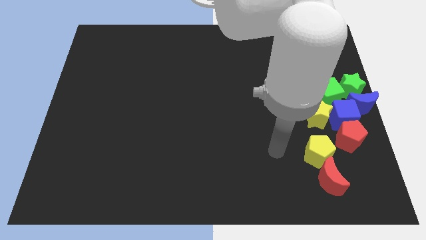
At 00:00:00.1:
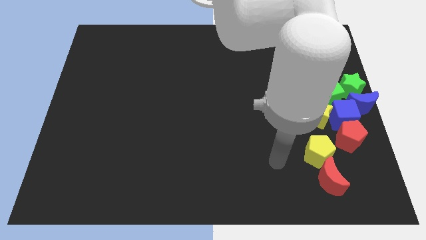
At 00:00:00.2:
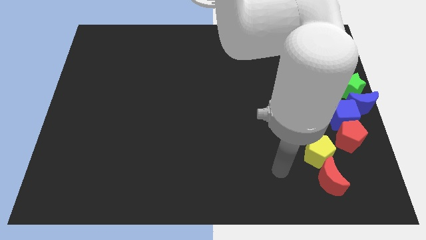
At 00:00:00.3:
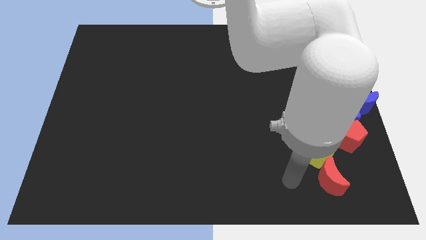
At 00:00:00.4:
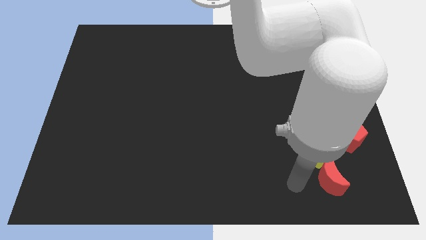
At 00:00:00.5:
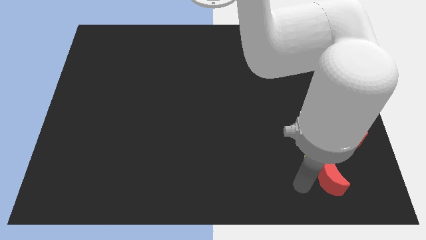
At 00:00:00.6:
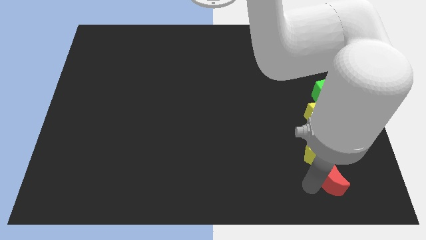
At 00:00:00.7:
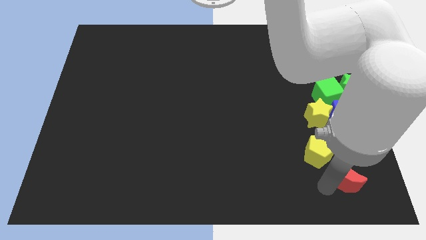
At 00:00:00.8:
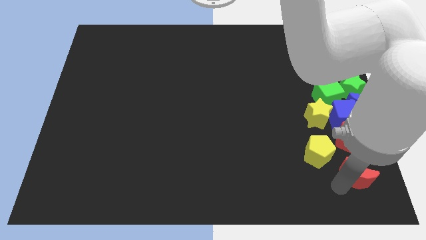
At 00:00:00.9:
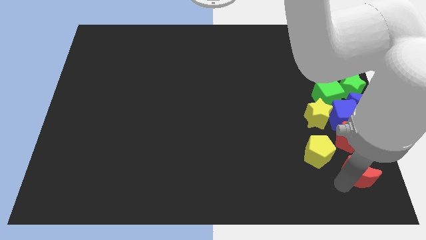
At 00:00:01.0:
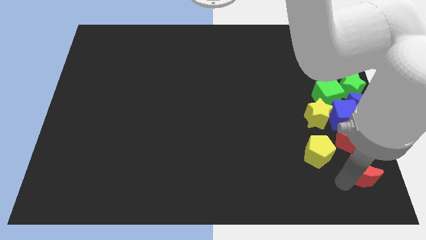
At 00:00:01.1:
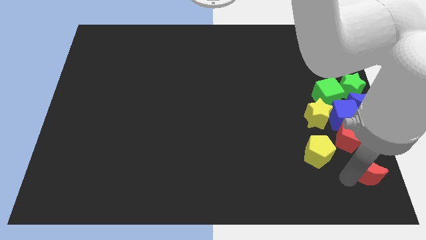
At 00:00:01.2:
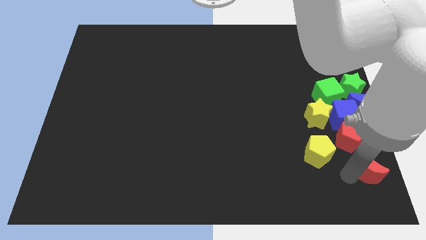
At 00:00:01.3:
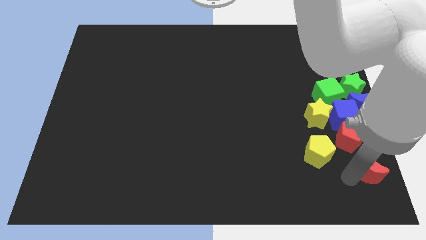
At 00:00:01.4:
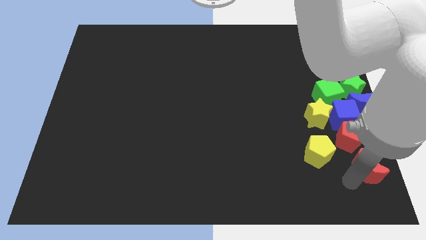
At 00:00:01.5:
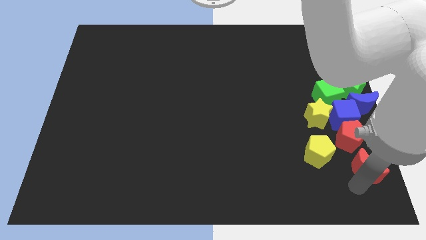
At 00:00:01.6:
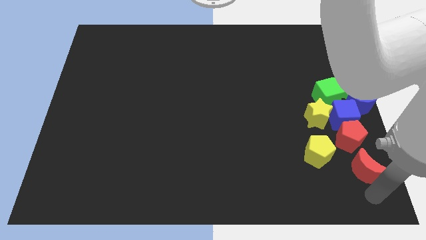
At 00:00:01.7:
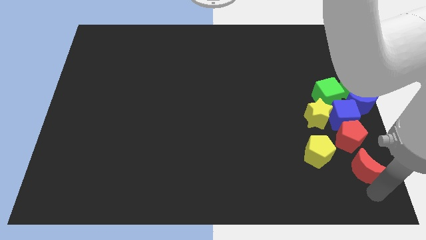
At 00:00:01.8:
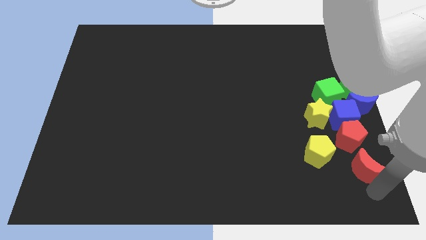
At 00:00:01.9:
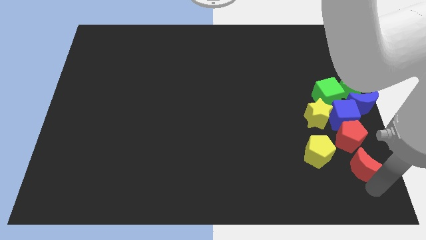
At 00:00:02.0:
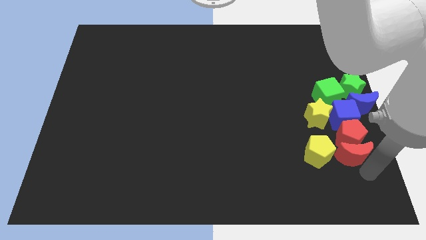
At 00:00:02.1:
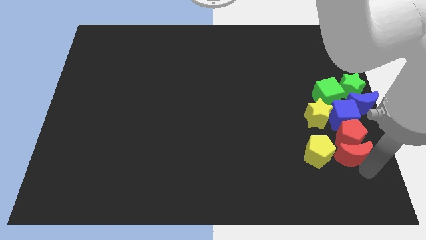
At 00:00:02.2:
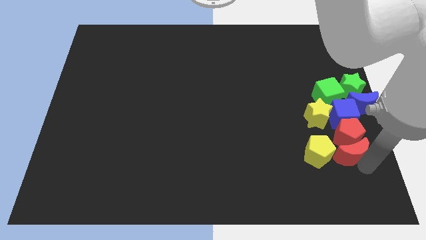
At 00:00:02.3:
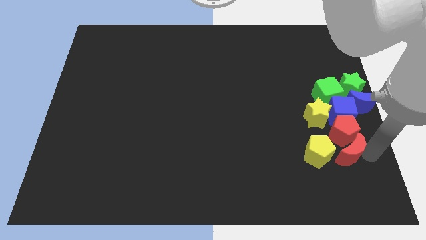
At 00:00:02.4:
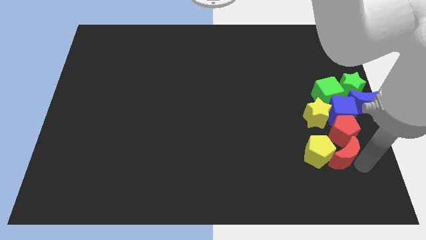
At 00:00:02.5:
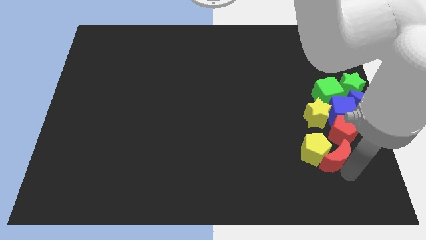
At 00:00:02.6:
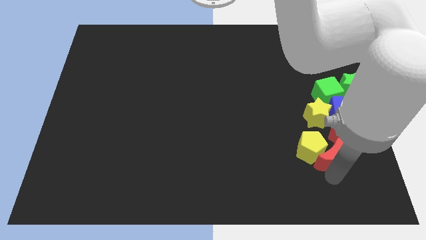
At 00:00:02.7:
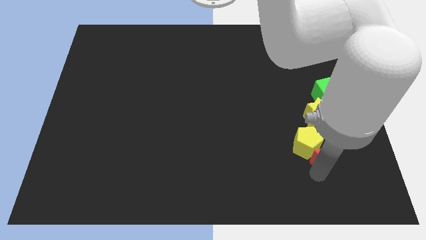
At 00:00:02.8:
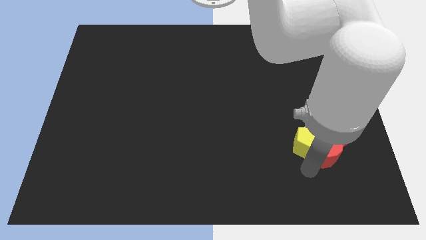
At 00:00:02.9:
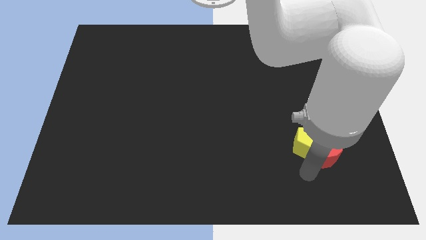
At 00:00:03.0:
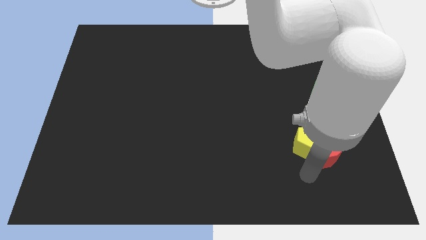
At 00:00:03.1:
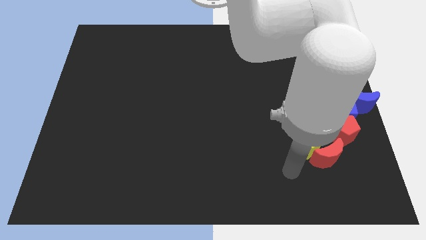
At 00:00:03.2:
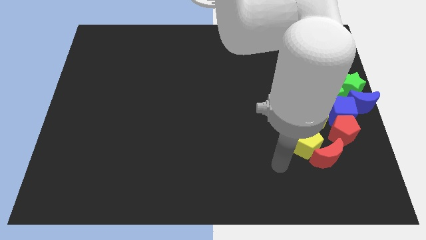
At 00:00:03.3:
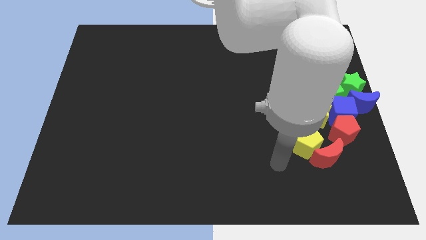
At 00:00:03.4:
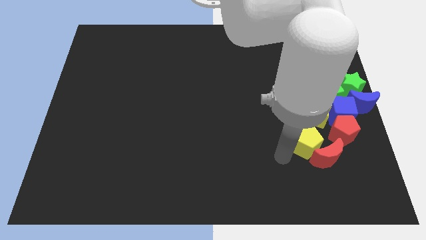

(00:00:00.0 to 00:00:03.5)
move the red moon into yellow pentagons

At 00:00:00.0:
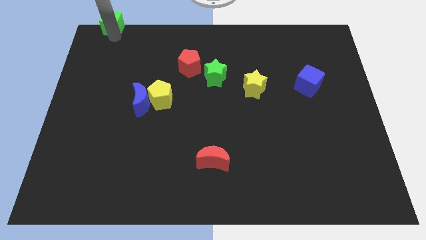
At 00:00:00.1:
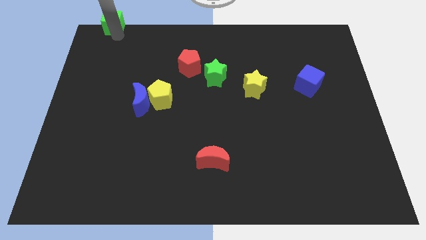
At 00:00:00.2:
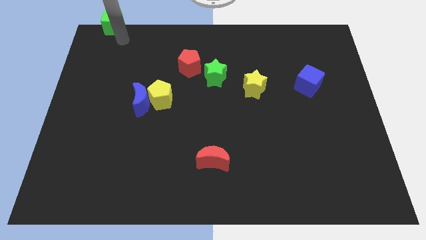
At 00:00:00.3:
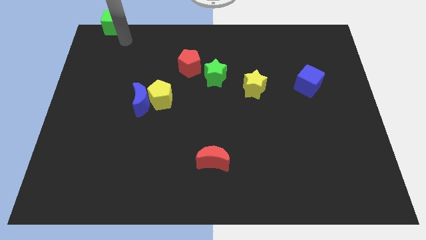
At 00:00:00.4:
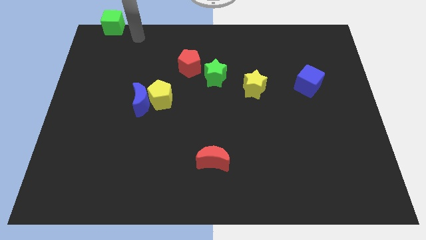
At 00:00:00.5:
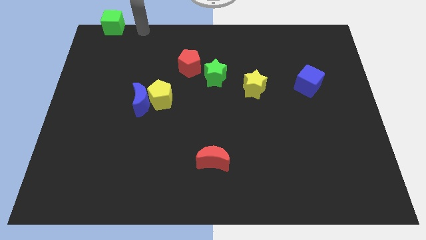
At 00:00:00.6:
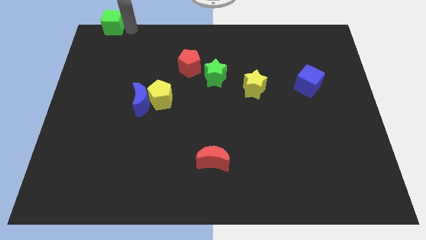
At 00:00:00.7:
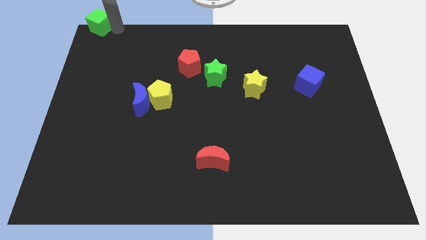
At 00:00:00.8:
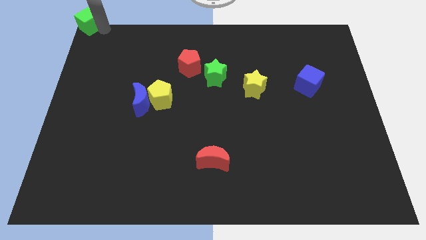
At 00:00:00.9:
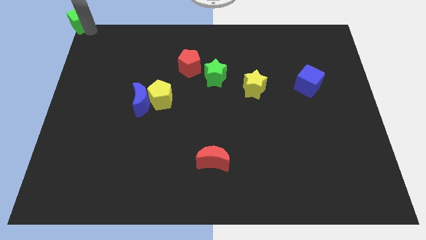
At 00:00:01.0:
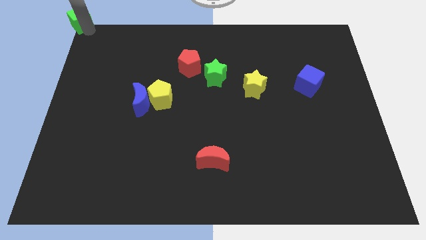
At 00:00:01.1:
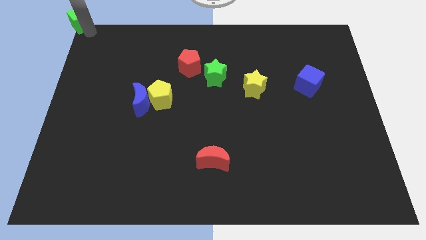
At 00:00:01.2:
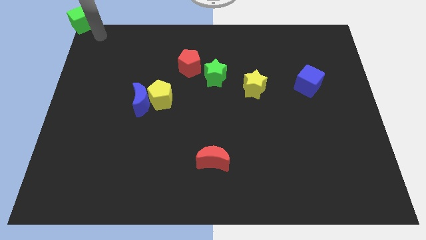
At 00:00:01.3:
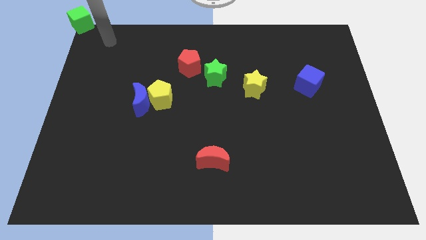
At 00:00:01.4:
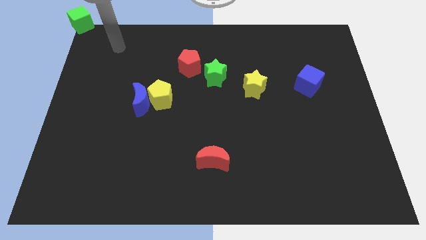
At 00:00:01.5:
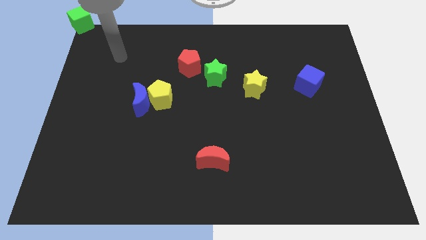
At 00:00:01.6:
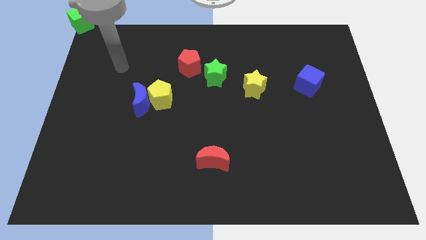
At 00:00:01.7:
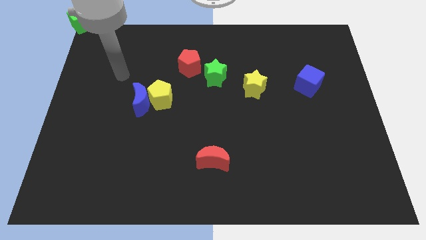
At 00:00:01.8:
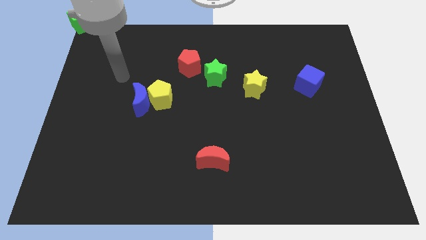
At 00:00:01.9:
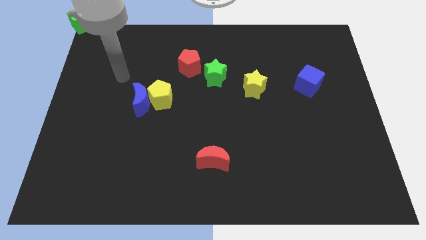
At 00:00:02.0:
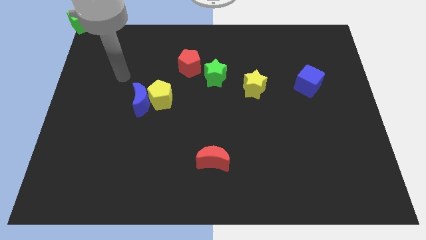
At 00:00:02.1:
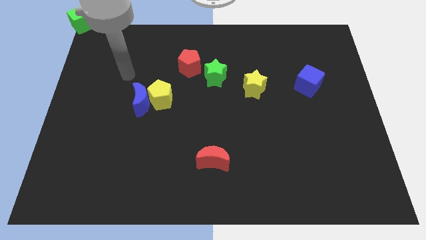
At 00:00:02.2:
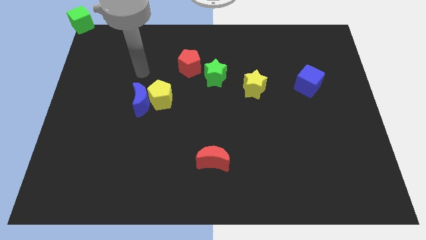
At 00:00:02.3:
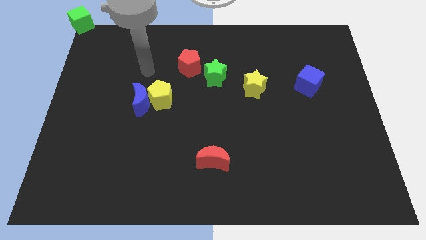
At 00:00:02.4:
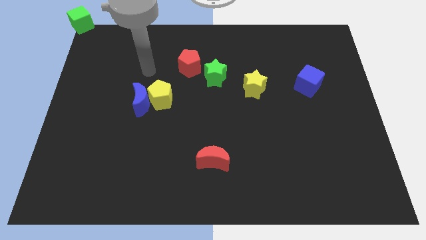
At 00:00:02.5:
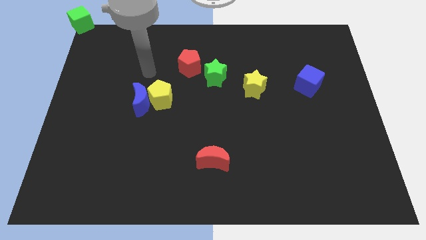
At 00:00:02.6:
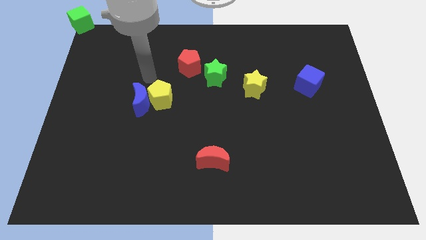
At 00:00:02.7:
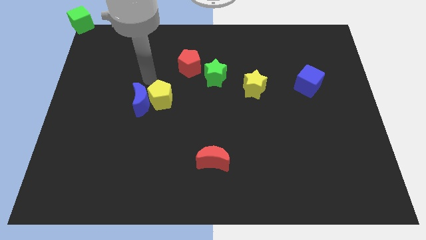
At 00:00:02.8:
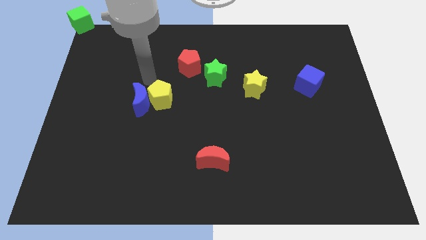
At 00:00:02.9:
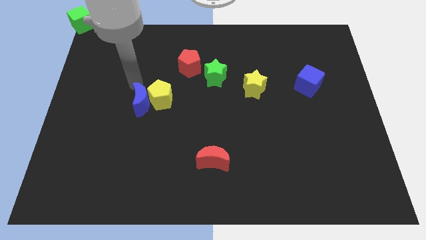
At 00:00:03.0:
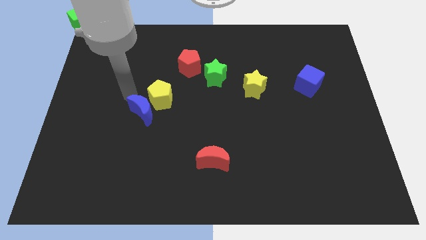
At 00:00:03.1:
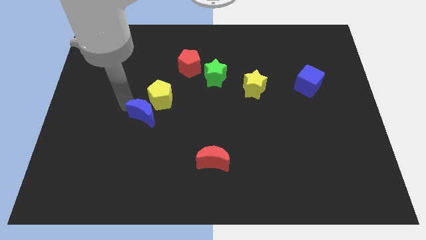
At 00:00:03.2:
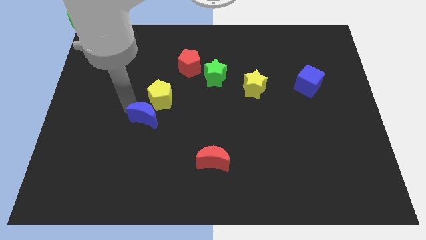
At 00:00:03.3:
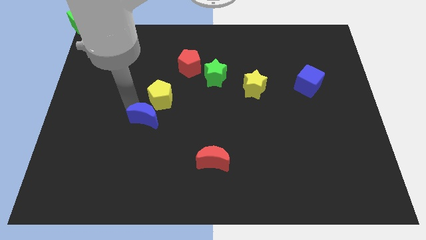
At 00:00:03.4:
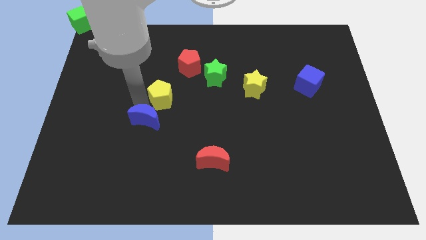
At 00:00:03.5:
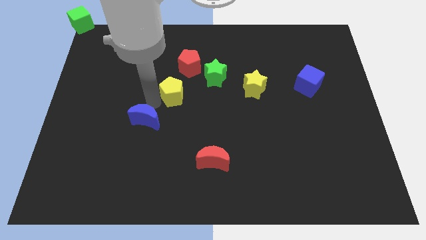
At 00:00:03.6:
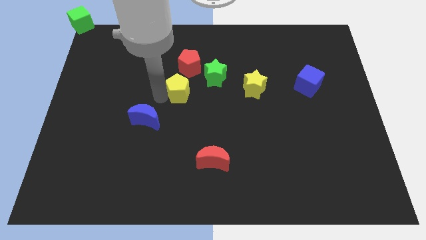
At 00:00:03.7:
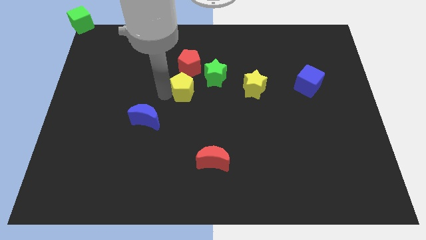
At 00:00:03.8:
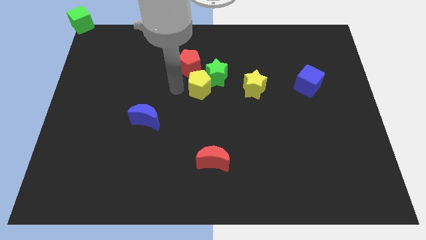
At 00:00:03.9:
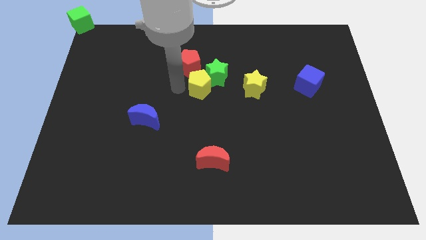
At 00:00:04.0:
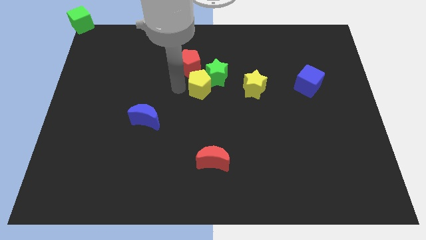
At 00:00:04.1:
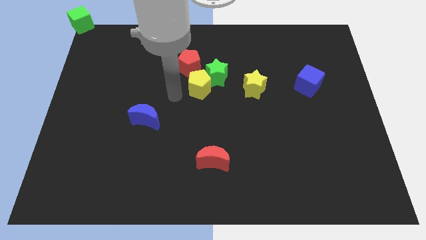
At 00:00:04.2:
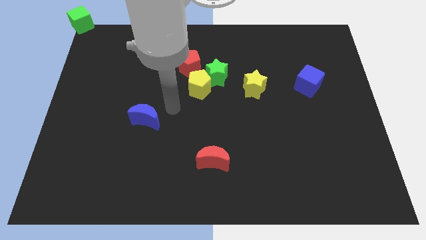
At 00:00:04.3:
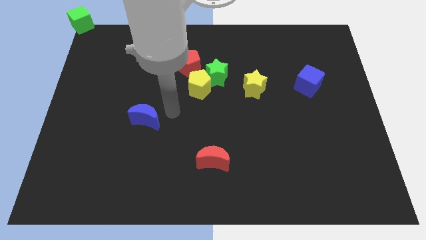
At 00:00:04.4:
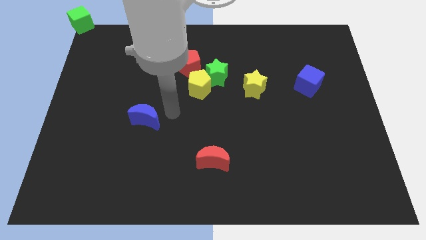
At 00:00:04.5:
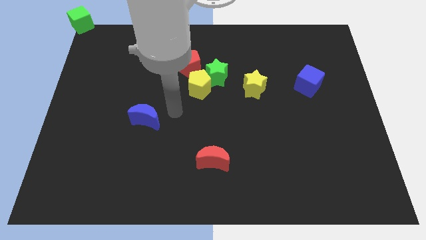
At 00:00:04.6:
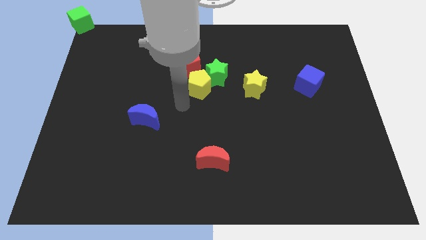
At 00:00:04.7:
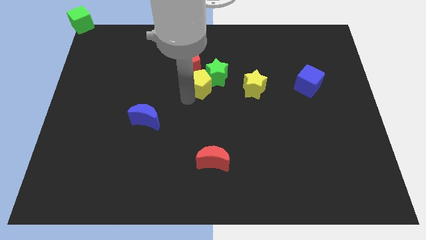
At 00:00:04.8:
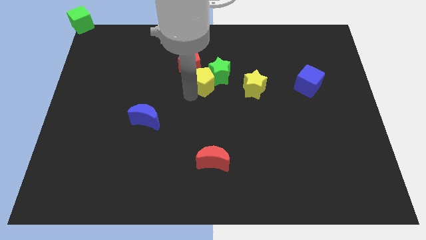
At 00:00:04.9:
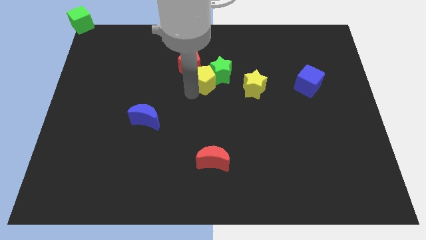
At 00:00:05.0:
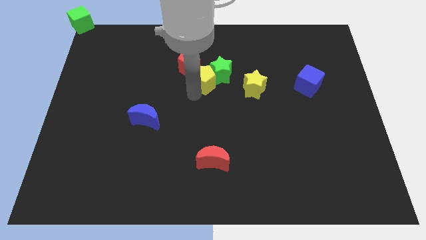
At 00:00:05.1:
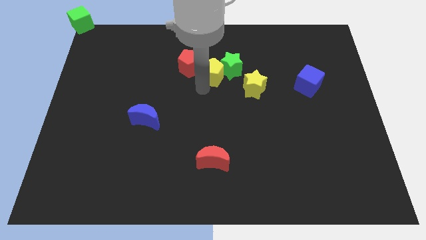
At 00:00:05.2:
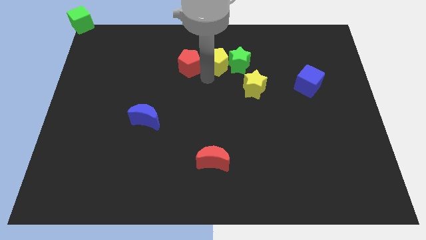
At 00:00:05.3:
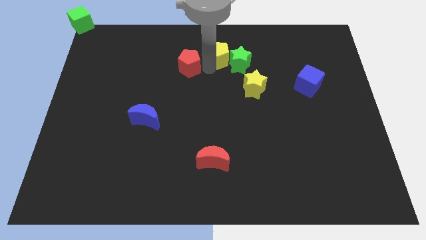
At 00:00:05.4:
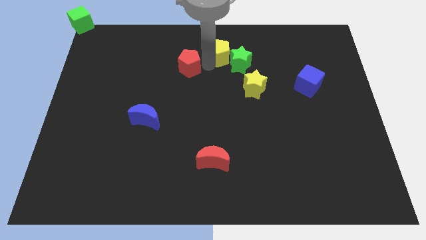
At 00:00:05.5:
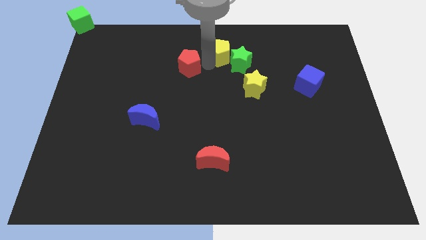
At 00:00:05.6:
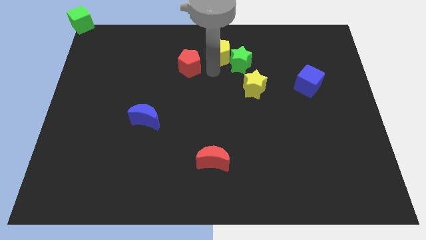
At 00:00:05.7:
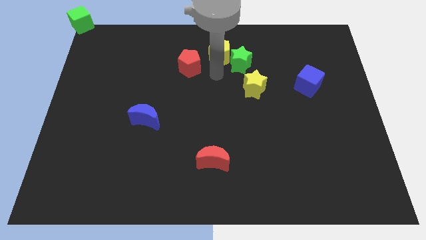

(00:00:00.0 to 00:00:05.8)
move the yellow pentagon between the green star and red pentagon
